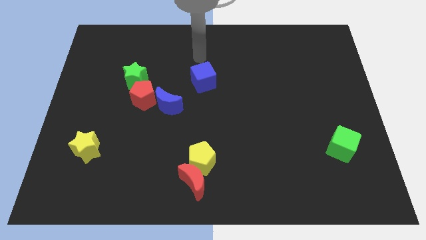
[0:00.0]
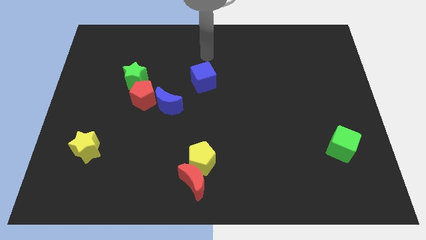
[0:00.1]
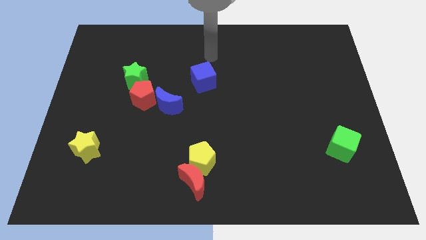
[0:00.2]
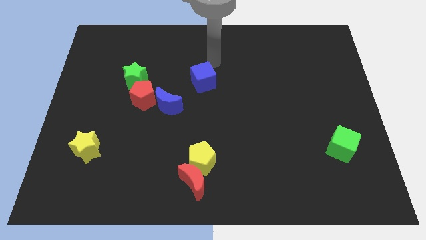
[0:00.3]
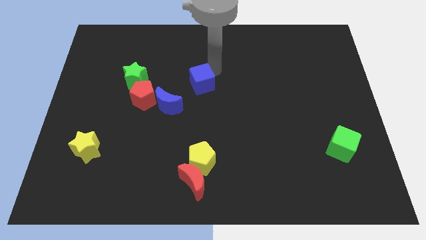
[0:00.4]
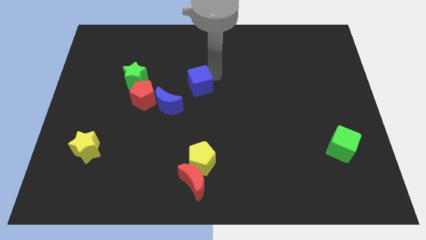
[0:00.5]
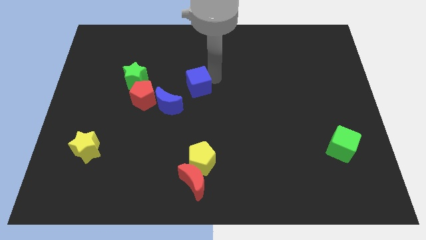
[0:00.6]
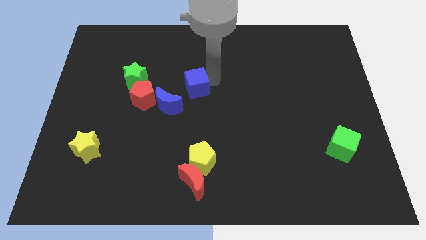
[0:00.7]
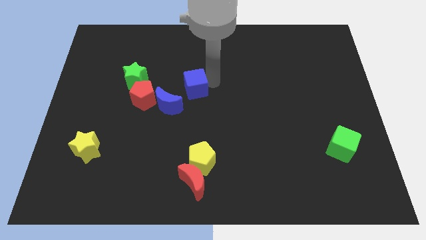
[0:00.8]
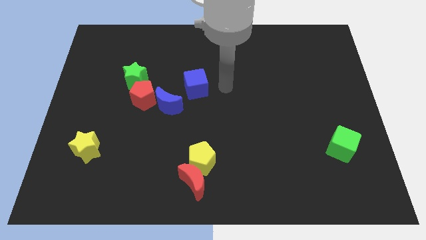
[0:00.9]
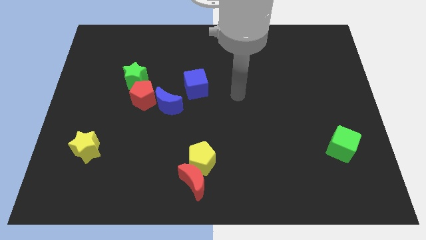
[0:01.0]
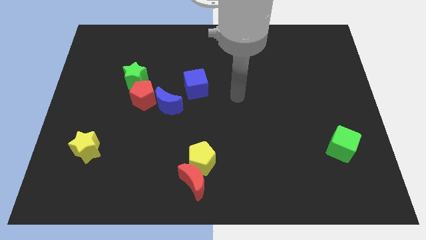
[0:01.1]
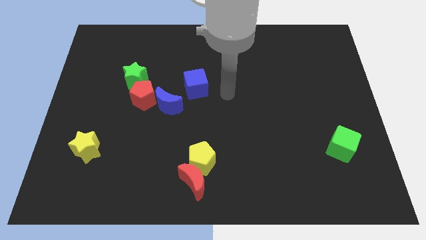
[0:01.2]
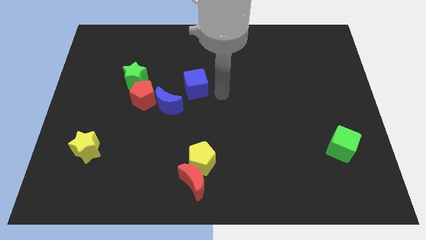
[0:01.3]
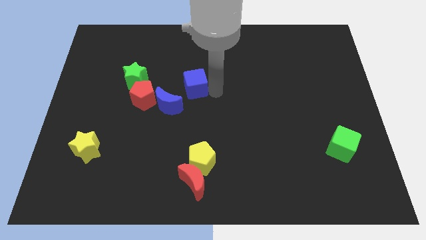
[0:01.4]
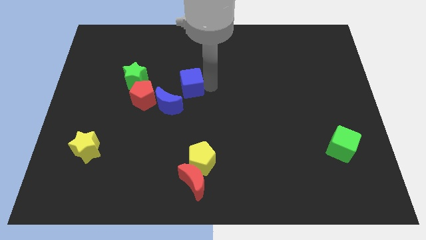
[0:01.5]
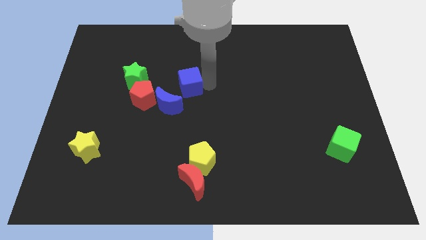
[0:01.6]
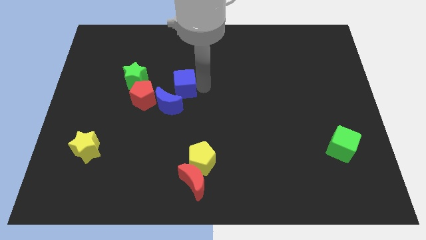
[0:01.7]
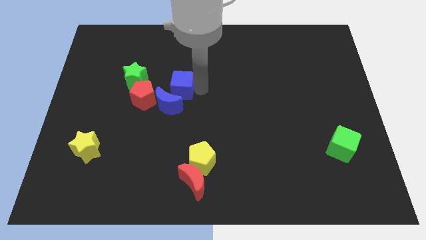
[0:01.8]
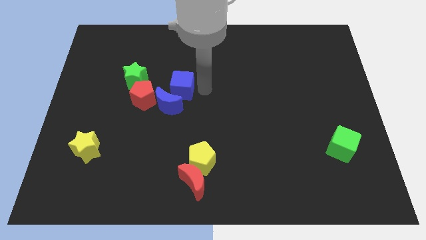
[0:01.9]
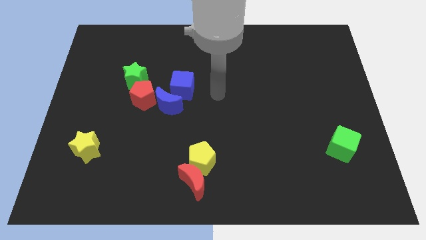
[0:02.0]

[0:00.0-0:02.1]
place the blue cube on top of blue moon

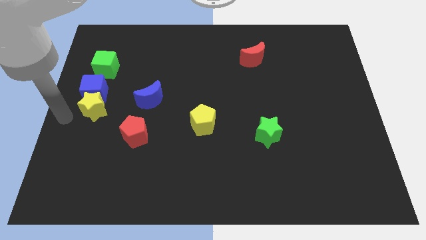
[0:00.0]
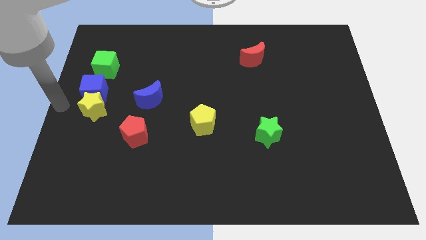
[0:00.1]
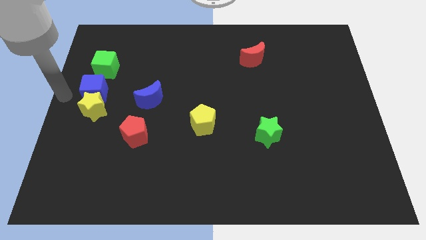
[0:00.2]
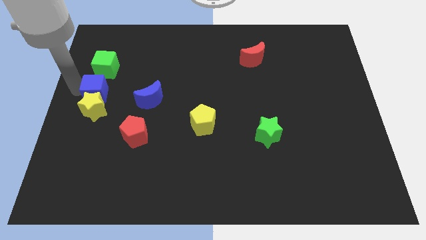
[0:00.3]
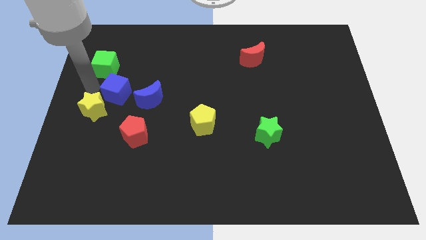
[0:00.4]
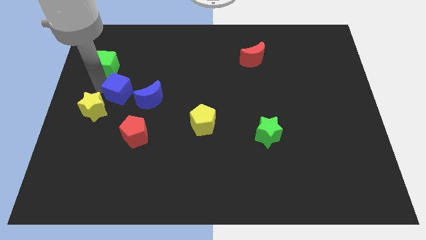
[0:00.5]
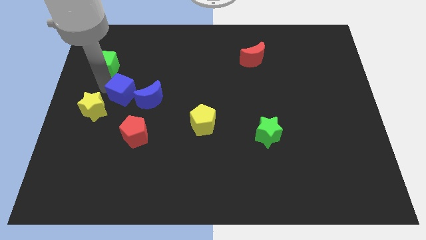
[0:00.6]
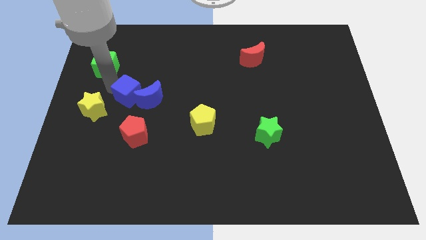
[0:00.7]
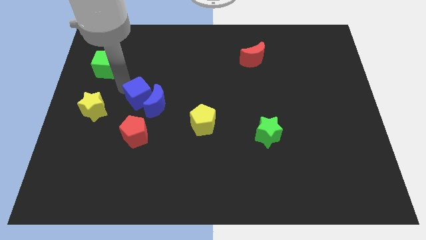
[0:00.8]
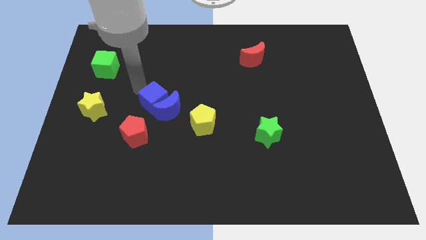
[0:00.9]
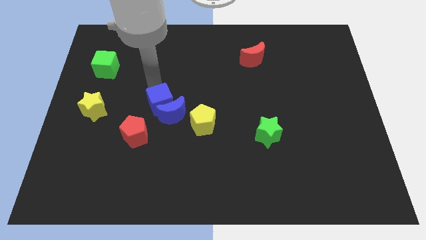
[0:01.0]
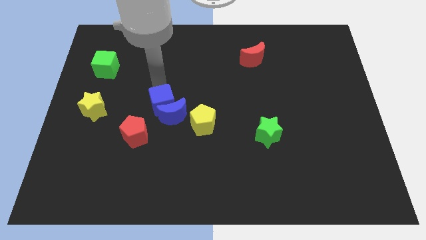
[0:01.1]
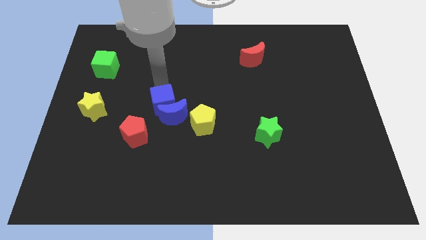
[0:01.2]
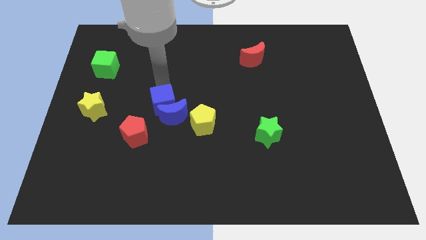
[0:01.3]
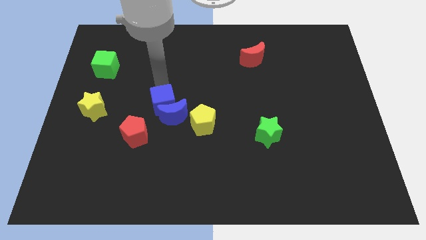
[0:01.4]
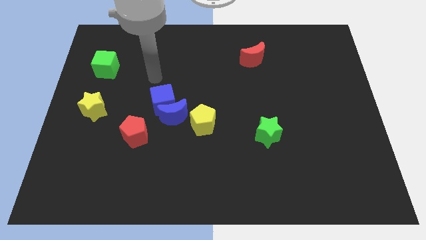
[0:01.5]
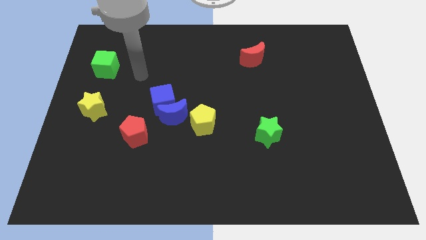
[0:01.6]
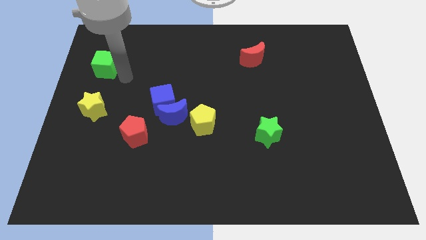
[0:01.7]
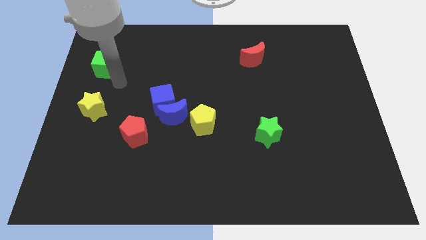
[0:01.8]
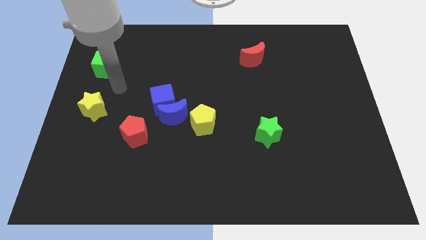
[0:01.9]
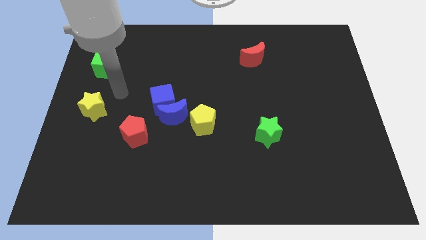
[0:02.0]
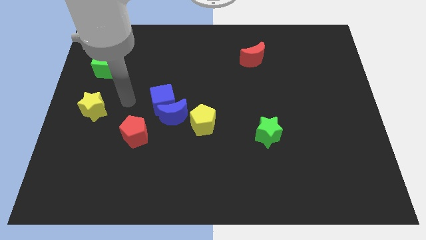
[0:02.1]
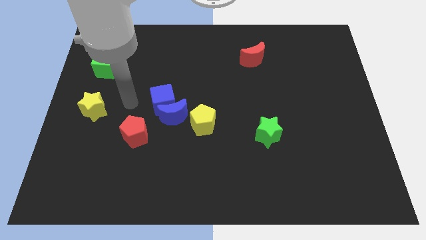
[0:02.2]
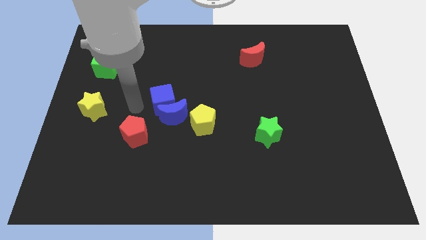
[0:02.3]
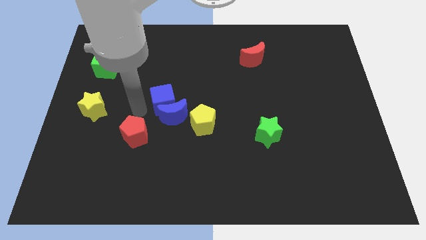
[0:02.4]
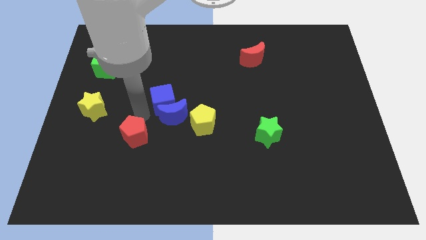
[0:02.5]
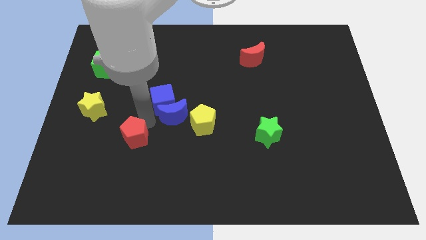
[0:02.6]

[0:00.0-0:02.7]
push the blue cube at the top right of the red pentagon

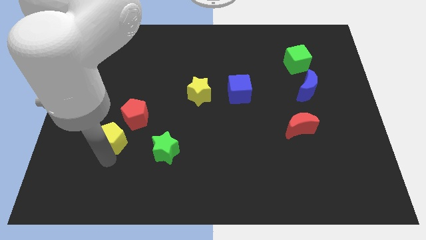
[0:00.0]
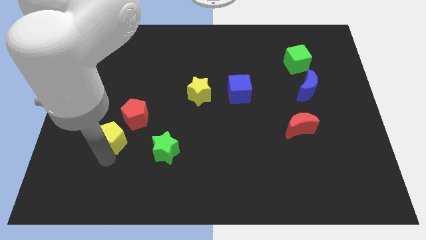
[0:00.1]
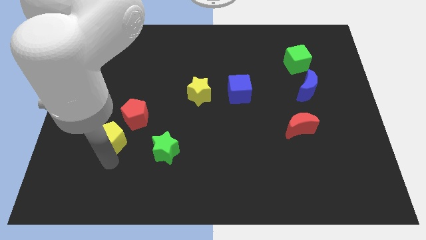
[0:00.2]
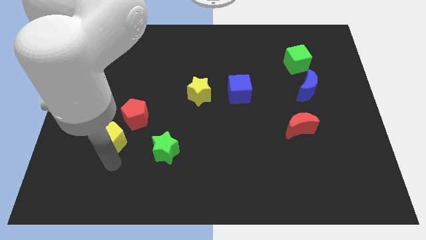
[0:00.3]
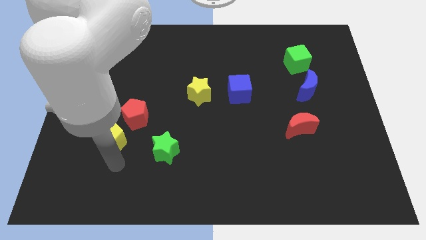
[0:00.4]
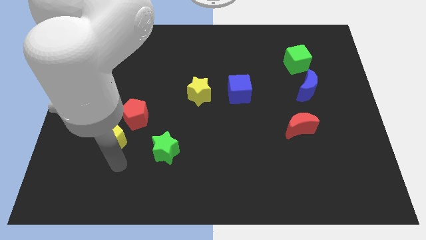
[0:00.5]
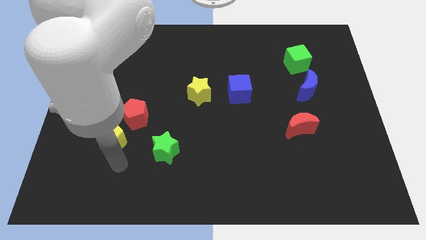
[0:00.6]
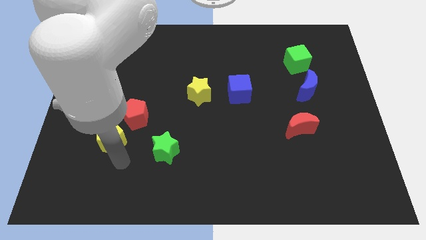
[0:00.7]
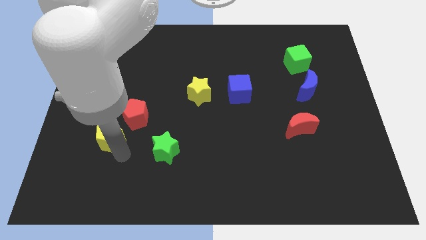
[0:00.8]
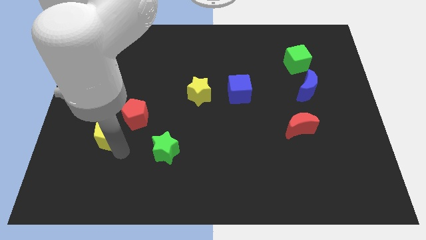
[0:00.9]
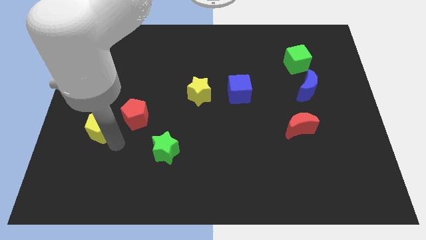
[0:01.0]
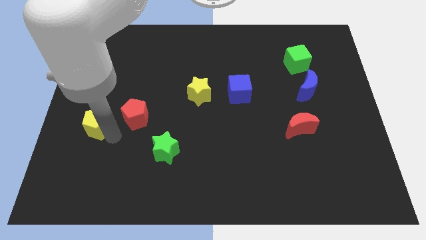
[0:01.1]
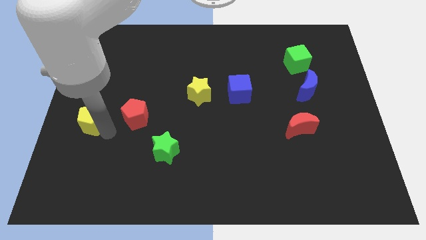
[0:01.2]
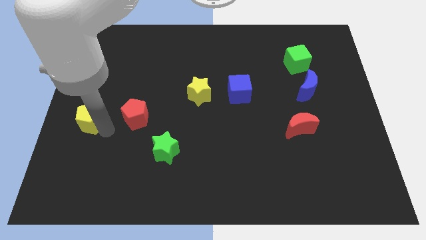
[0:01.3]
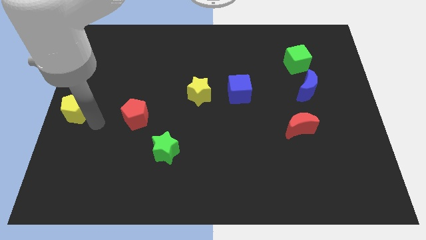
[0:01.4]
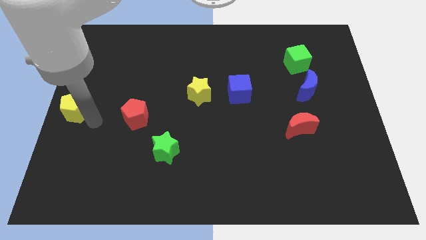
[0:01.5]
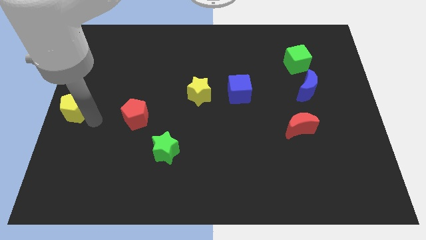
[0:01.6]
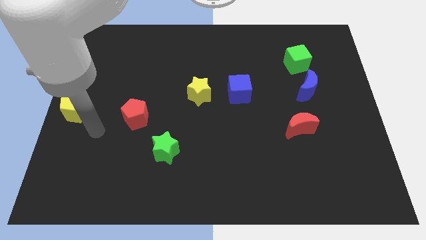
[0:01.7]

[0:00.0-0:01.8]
place yellow pentagon to the left center of the board

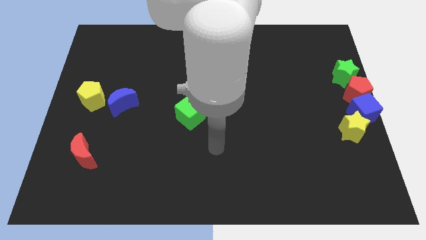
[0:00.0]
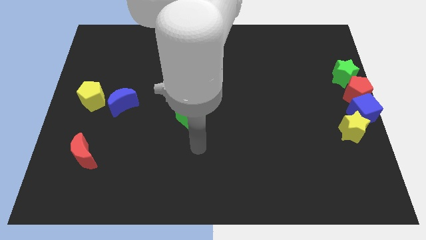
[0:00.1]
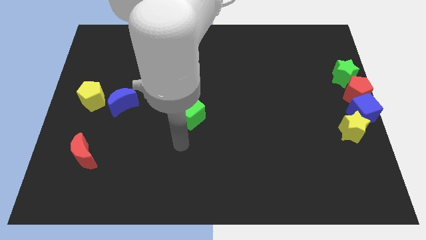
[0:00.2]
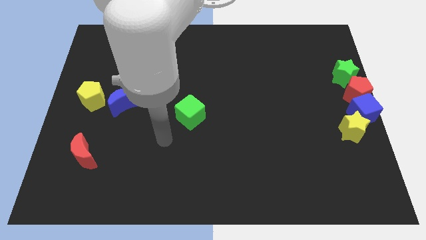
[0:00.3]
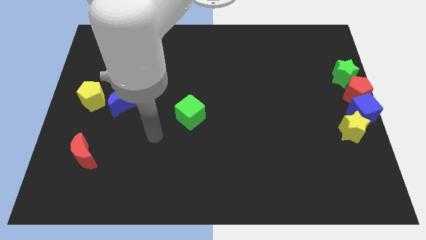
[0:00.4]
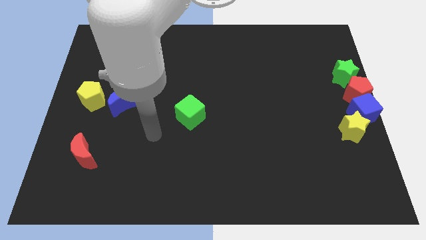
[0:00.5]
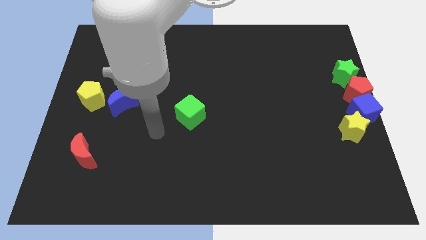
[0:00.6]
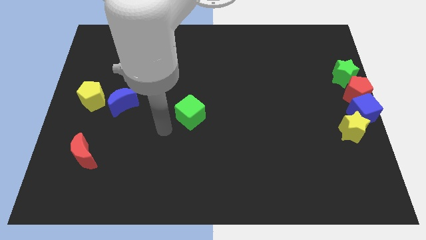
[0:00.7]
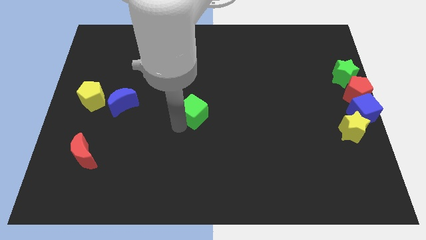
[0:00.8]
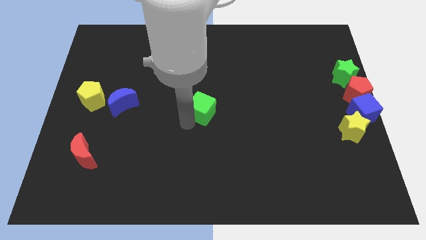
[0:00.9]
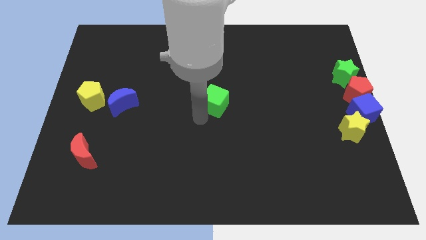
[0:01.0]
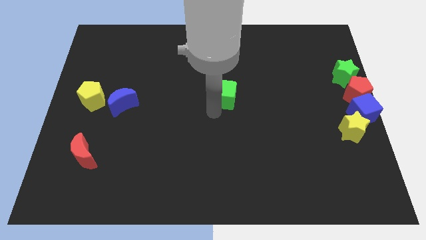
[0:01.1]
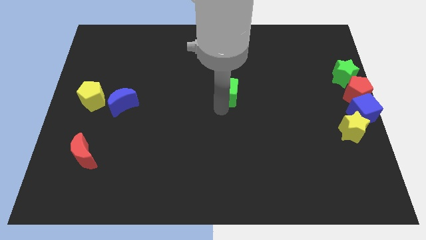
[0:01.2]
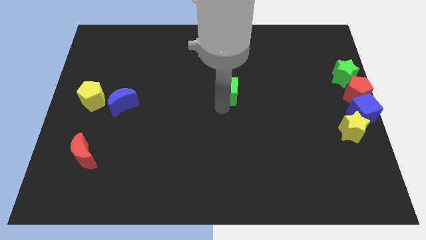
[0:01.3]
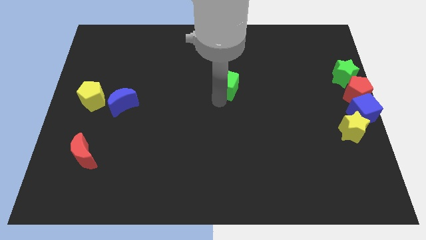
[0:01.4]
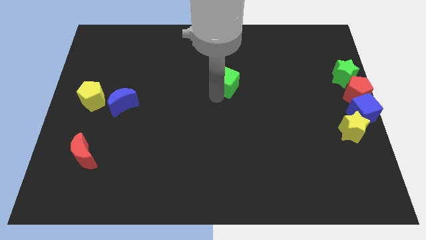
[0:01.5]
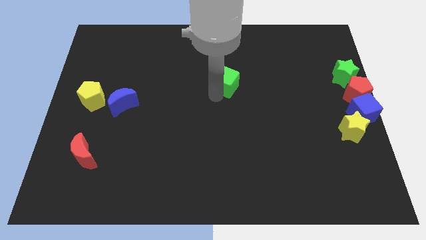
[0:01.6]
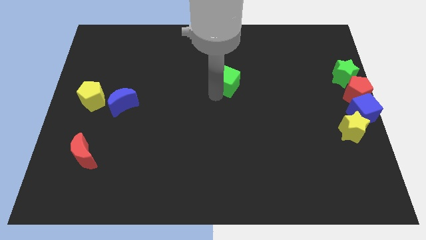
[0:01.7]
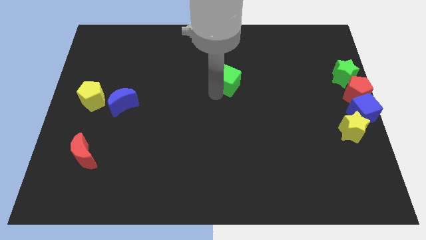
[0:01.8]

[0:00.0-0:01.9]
move the green cube towards the top center

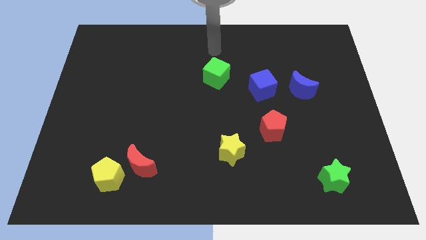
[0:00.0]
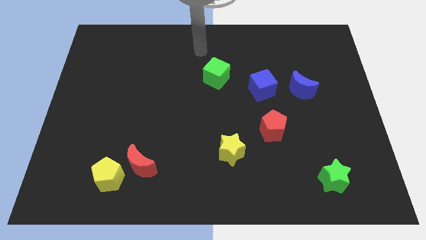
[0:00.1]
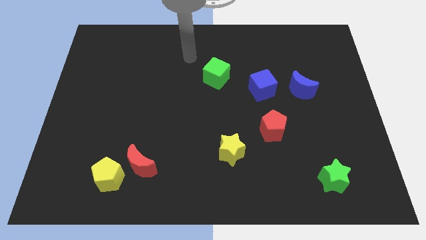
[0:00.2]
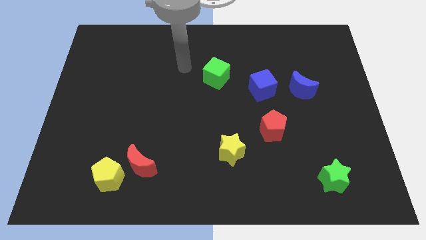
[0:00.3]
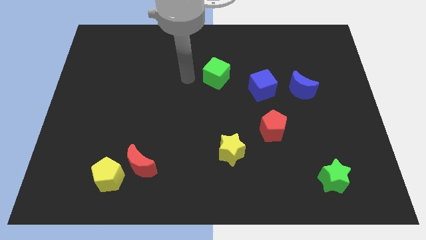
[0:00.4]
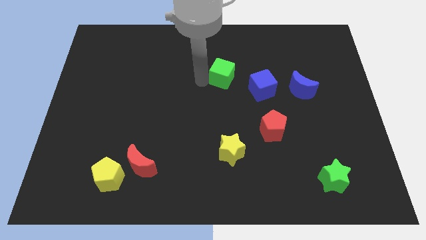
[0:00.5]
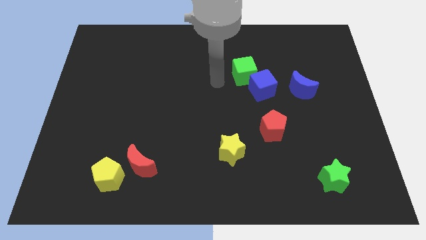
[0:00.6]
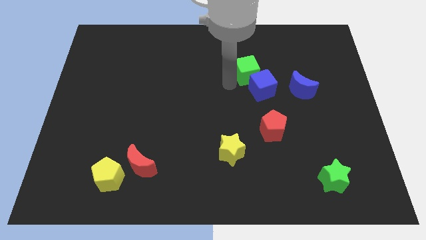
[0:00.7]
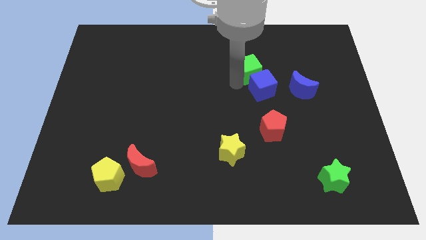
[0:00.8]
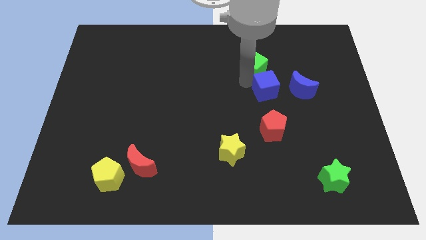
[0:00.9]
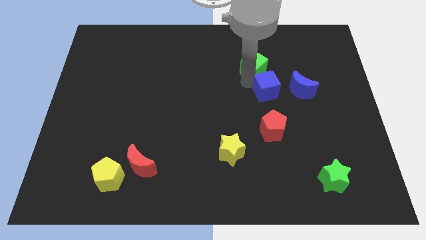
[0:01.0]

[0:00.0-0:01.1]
move green cube into blue cube
